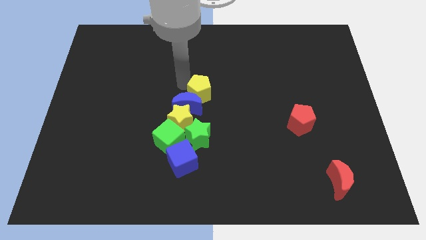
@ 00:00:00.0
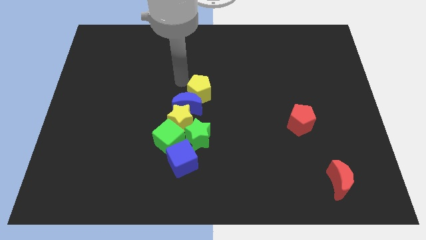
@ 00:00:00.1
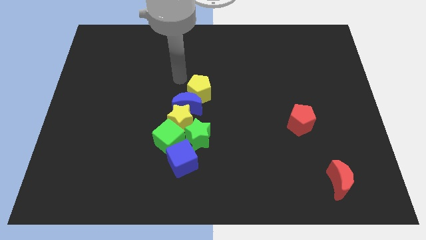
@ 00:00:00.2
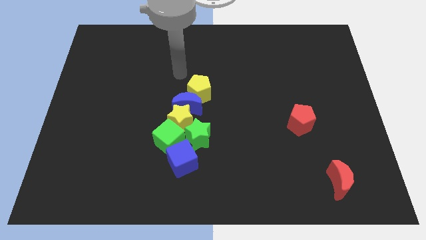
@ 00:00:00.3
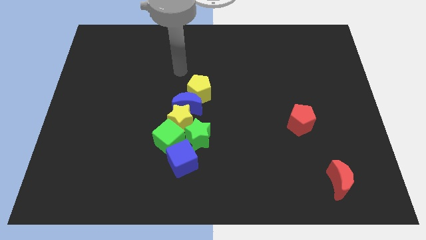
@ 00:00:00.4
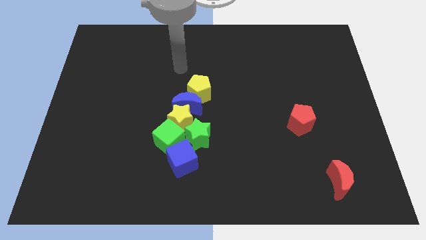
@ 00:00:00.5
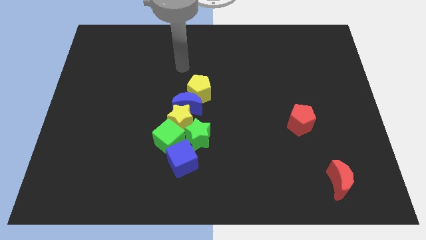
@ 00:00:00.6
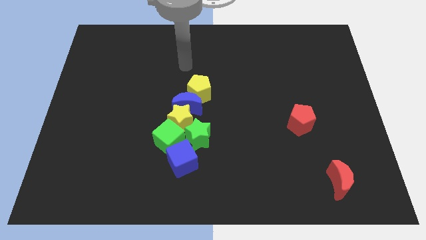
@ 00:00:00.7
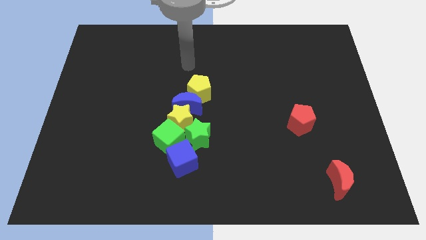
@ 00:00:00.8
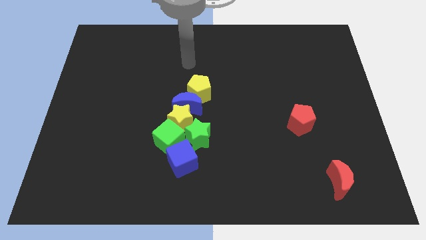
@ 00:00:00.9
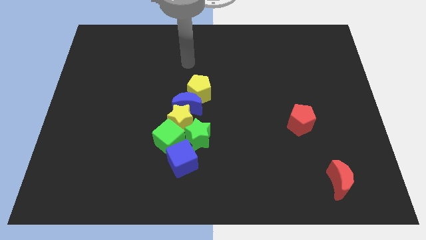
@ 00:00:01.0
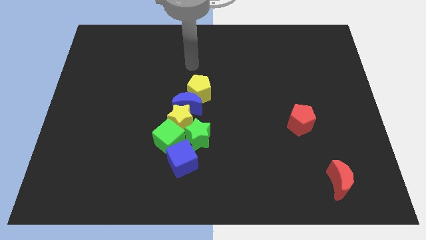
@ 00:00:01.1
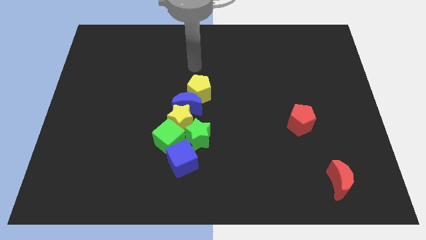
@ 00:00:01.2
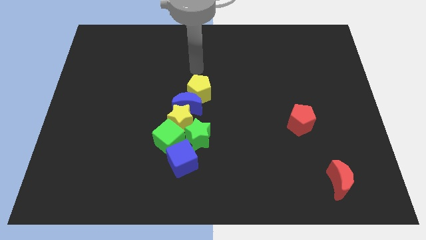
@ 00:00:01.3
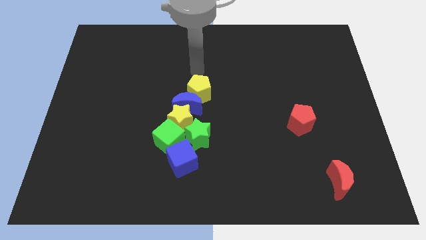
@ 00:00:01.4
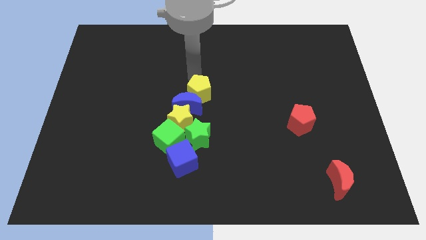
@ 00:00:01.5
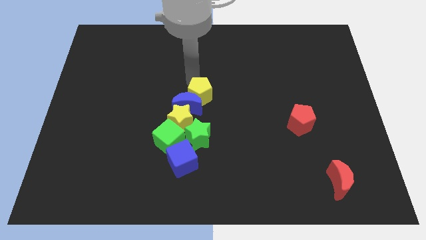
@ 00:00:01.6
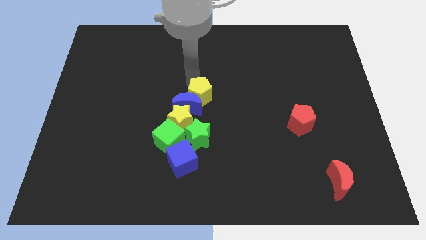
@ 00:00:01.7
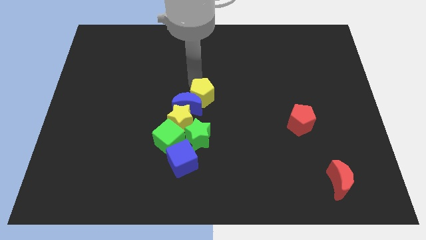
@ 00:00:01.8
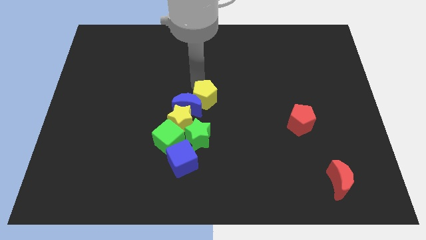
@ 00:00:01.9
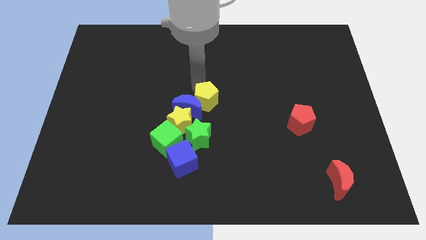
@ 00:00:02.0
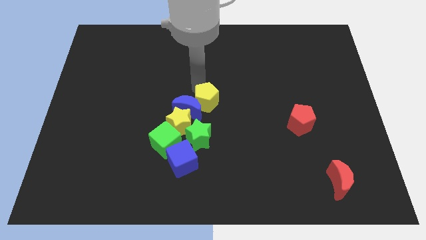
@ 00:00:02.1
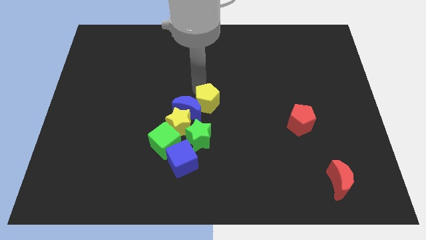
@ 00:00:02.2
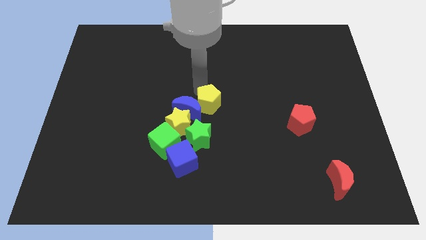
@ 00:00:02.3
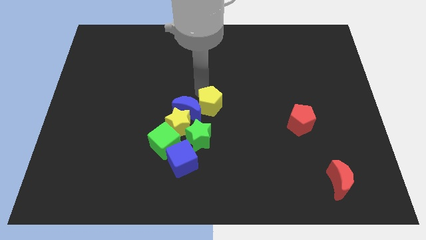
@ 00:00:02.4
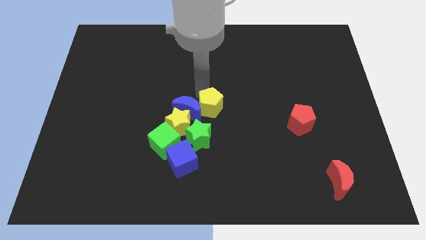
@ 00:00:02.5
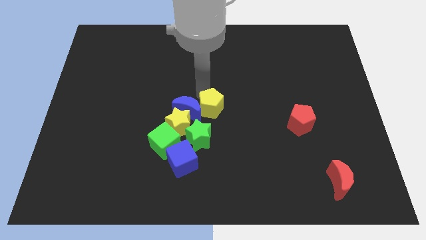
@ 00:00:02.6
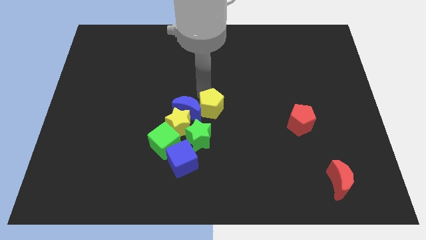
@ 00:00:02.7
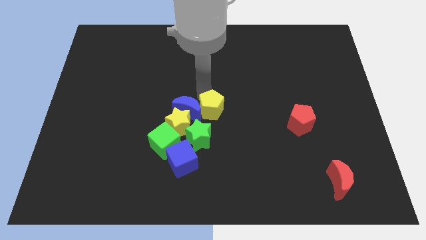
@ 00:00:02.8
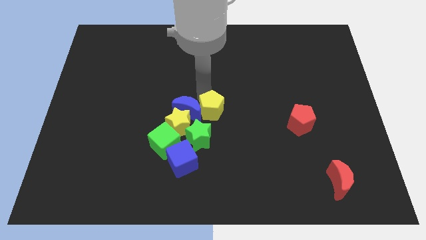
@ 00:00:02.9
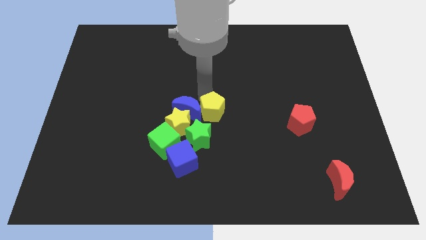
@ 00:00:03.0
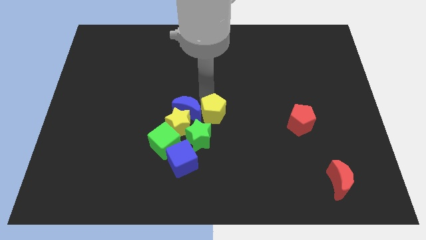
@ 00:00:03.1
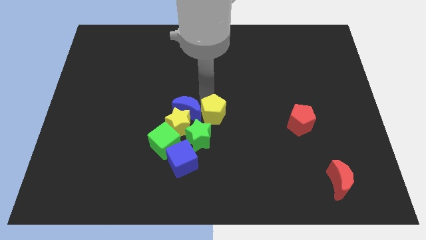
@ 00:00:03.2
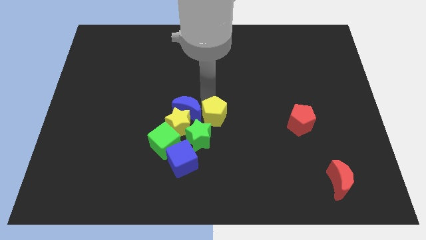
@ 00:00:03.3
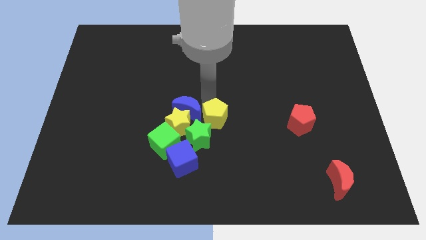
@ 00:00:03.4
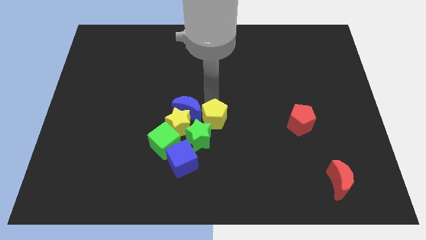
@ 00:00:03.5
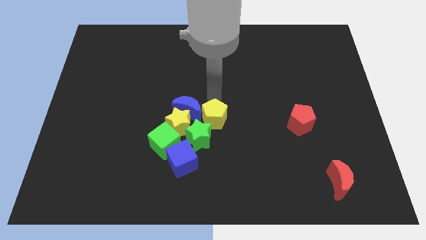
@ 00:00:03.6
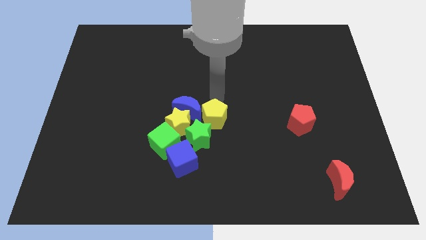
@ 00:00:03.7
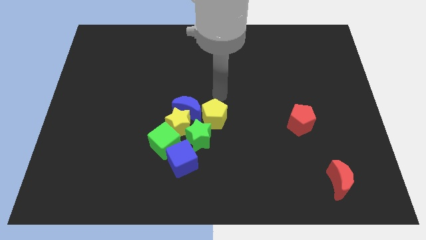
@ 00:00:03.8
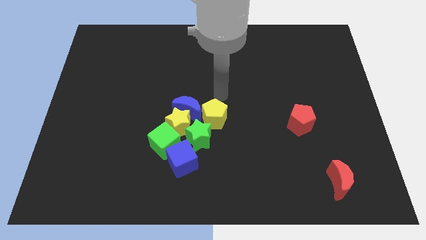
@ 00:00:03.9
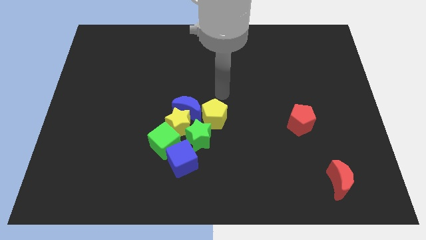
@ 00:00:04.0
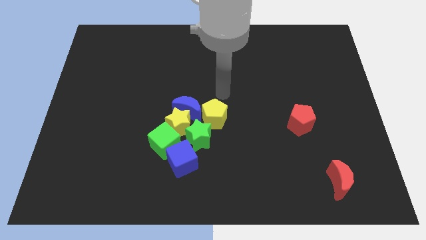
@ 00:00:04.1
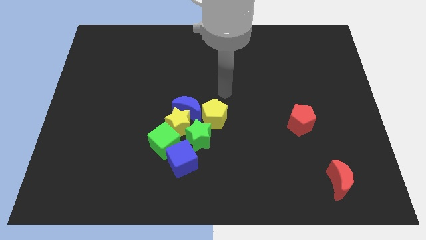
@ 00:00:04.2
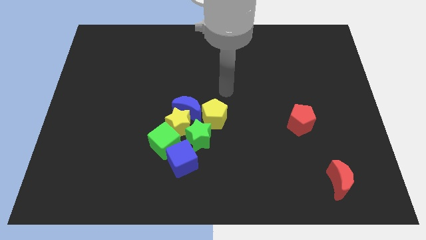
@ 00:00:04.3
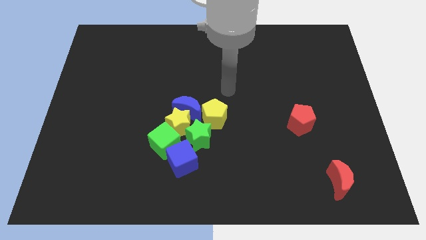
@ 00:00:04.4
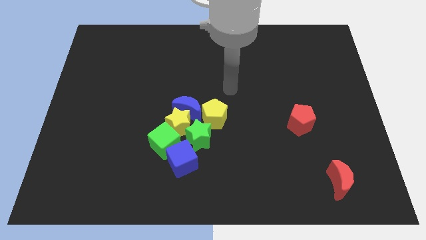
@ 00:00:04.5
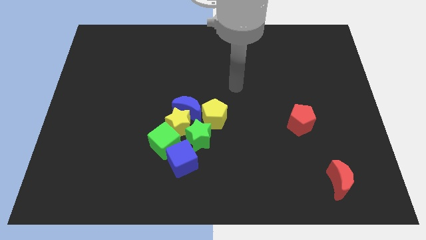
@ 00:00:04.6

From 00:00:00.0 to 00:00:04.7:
move the yellow pentagon slightly downwards

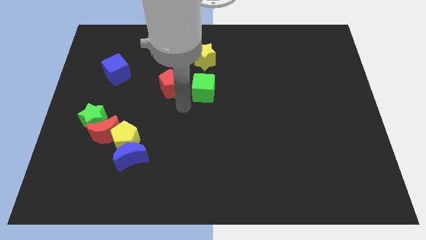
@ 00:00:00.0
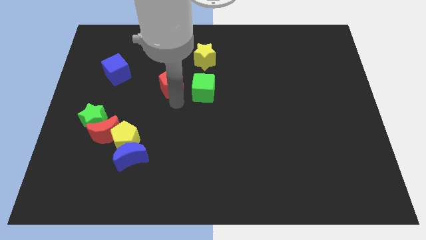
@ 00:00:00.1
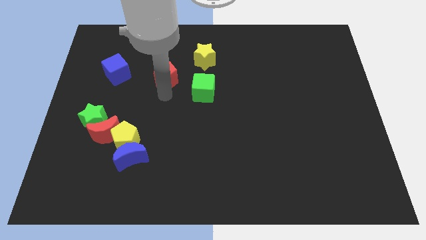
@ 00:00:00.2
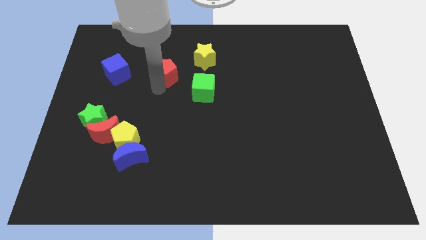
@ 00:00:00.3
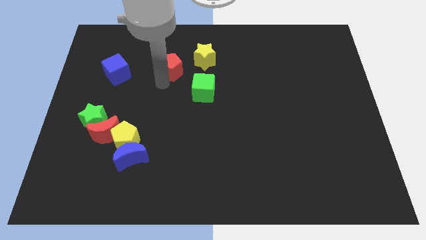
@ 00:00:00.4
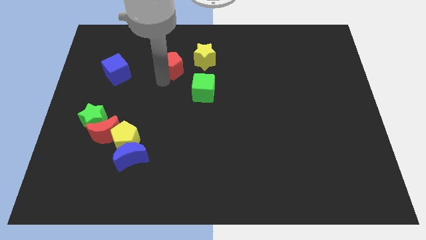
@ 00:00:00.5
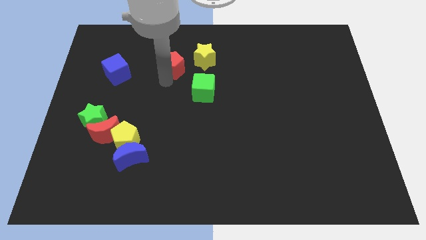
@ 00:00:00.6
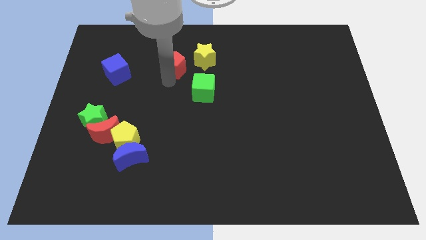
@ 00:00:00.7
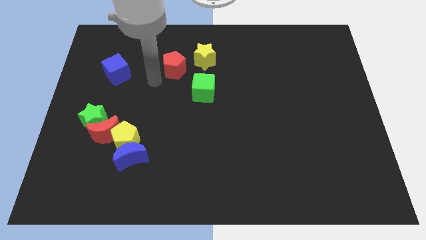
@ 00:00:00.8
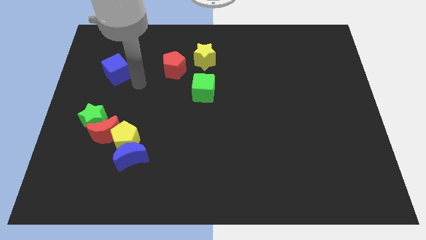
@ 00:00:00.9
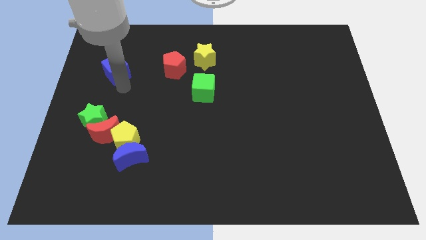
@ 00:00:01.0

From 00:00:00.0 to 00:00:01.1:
push the red pentagon towards yellow star

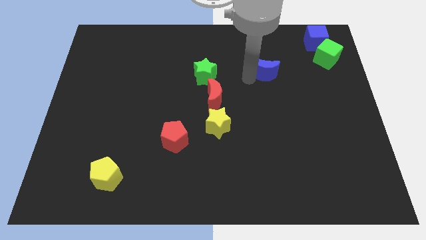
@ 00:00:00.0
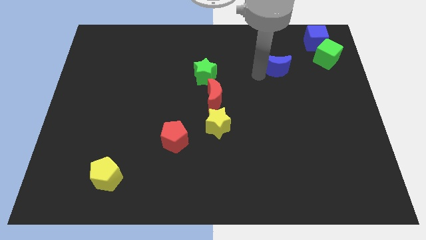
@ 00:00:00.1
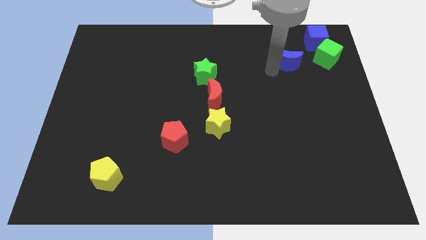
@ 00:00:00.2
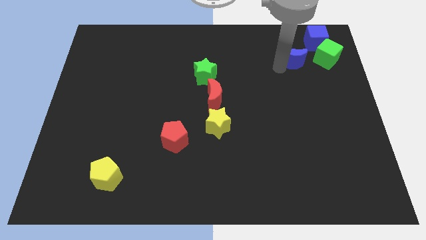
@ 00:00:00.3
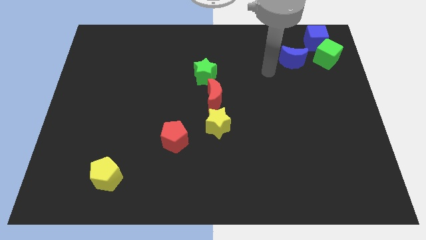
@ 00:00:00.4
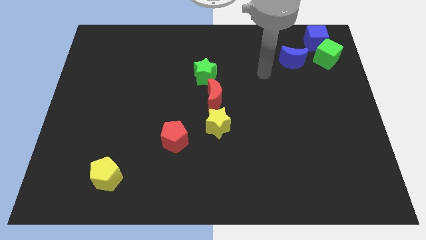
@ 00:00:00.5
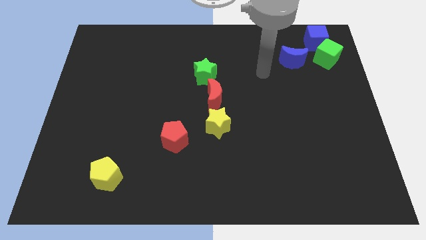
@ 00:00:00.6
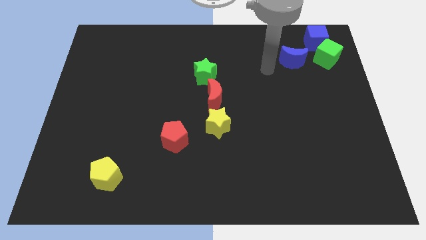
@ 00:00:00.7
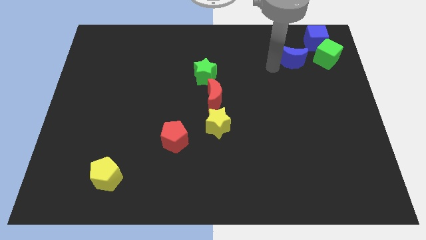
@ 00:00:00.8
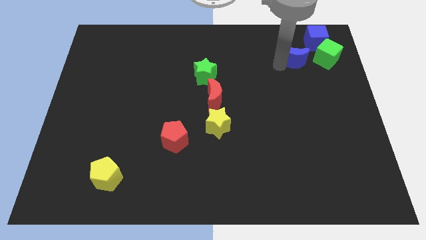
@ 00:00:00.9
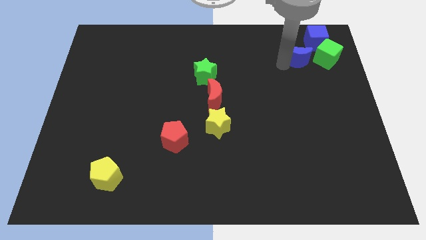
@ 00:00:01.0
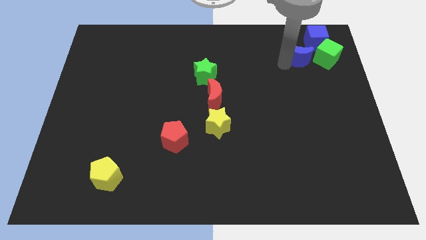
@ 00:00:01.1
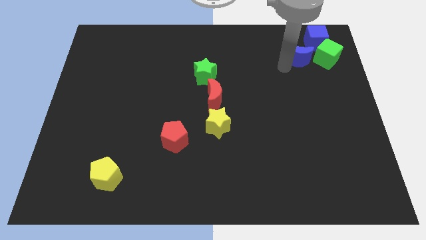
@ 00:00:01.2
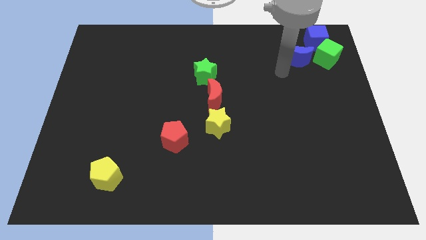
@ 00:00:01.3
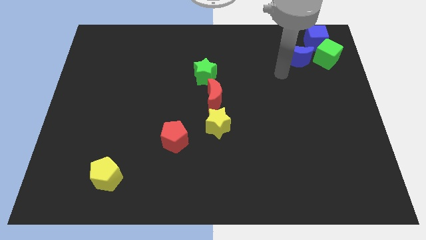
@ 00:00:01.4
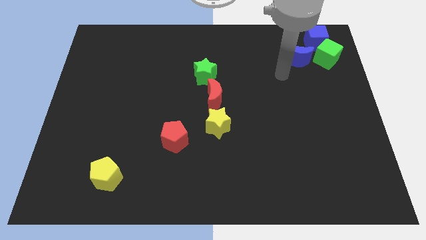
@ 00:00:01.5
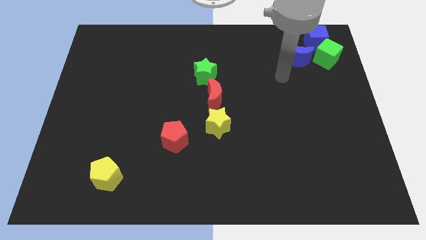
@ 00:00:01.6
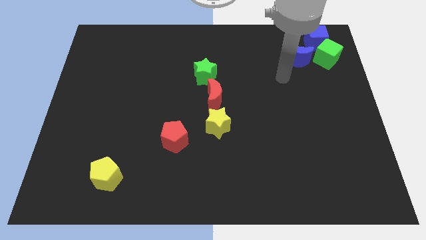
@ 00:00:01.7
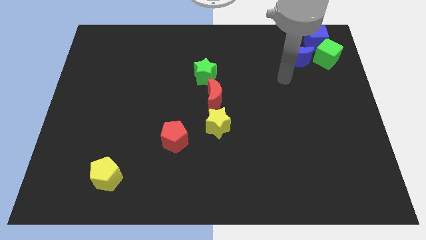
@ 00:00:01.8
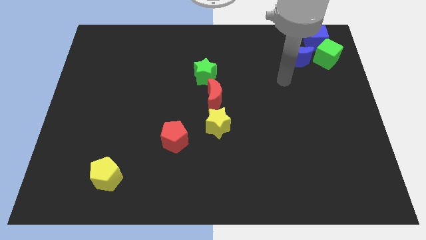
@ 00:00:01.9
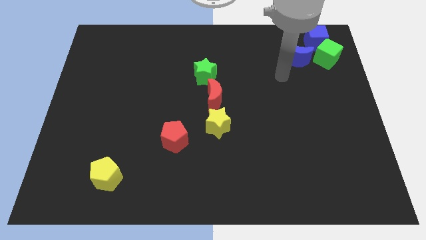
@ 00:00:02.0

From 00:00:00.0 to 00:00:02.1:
put the blue crescent on the left side of the green cube

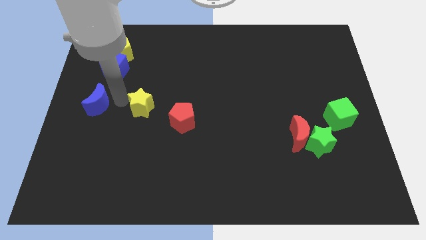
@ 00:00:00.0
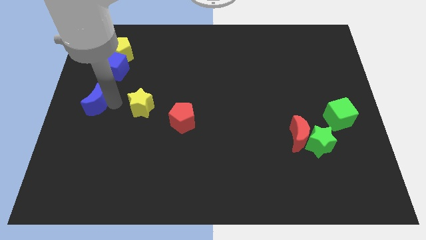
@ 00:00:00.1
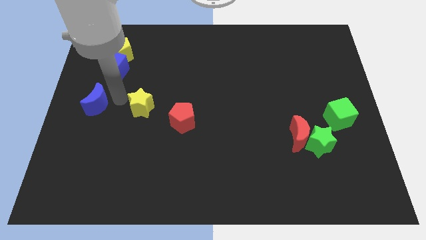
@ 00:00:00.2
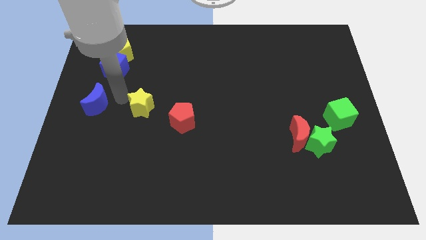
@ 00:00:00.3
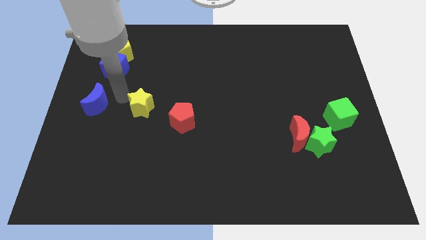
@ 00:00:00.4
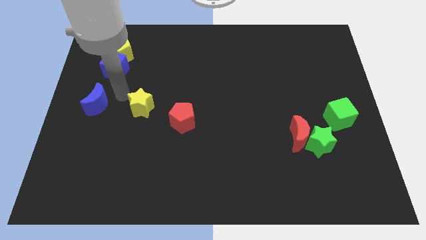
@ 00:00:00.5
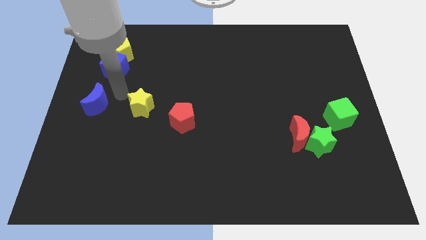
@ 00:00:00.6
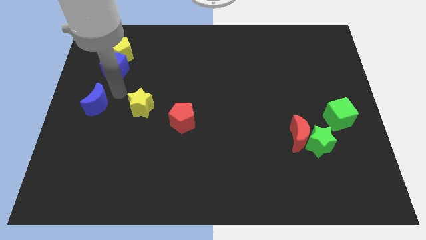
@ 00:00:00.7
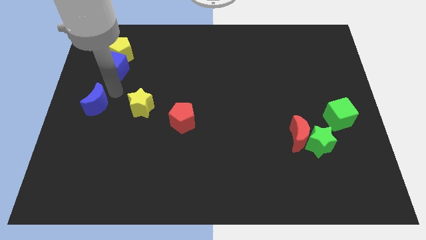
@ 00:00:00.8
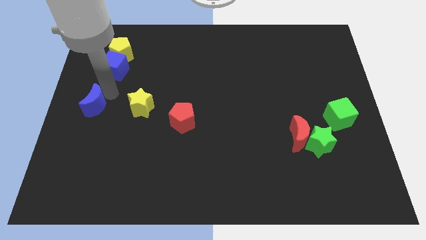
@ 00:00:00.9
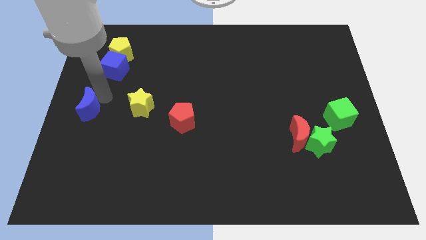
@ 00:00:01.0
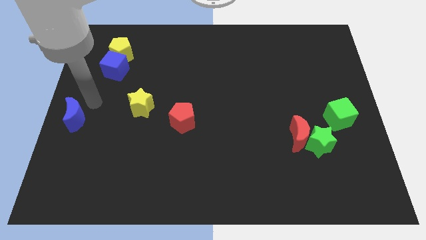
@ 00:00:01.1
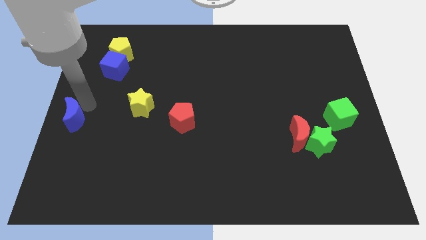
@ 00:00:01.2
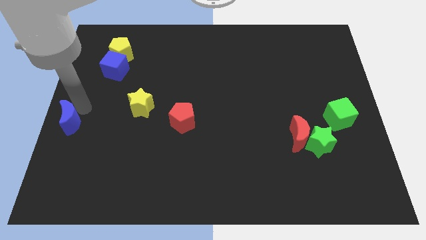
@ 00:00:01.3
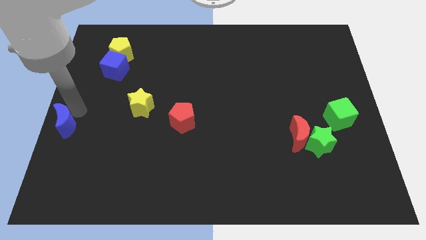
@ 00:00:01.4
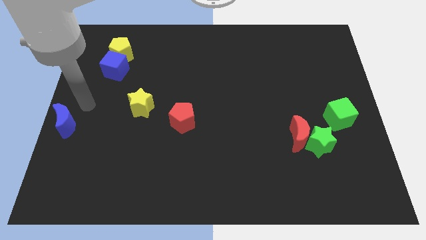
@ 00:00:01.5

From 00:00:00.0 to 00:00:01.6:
place the blue crescent at the center left of the board
